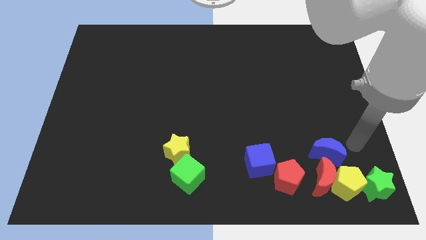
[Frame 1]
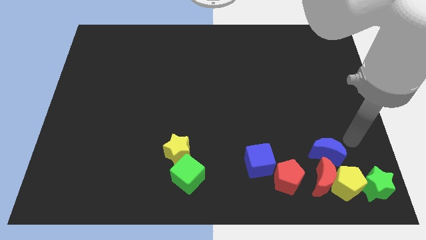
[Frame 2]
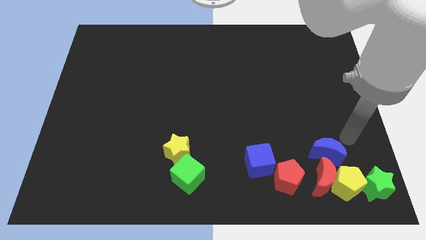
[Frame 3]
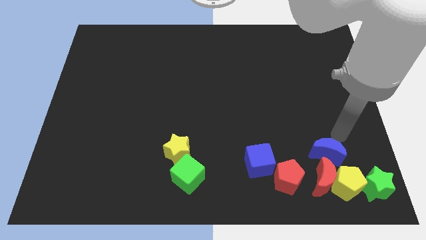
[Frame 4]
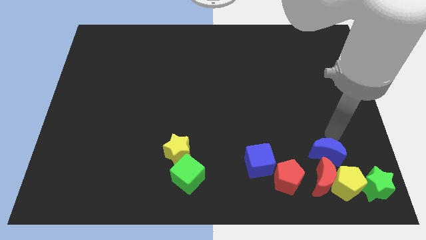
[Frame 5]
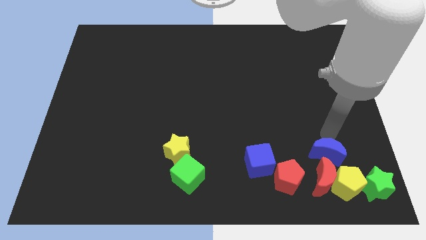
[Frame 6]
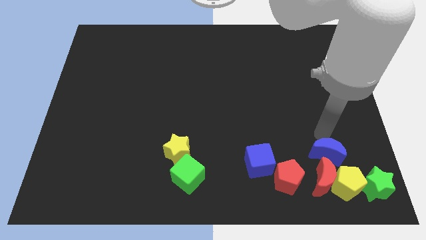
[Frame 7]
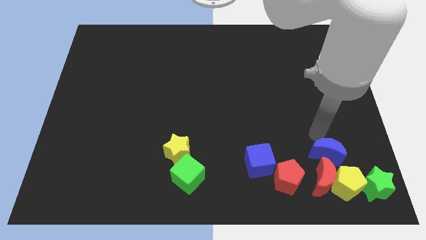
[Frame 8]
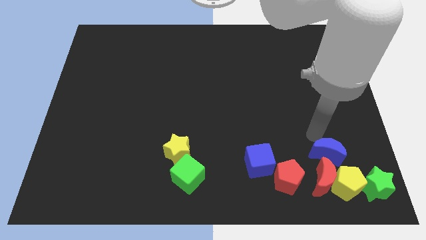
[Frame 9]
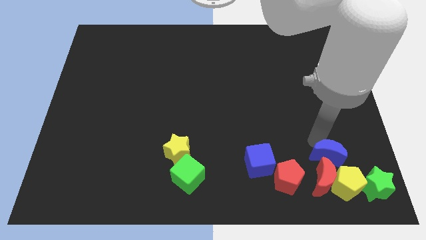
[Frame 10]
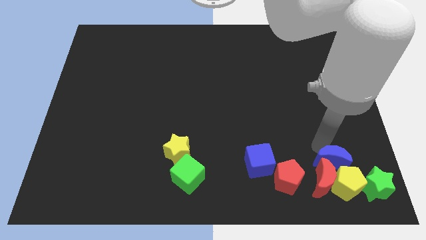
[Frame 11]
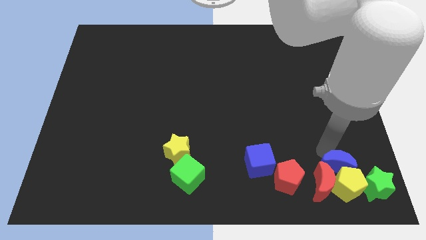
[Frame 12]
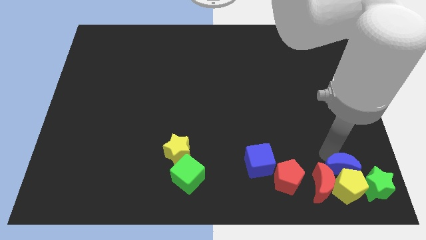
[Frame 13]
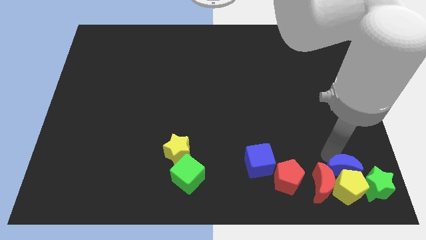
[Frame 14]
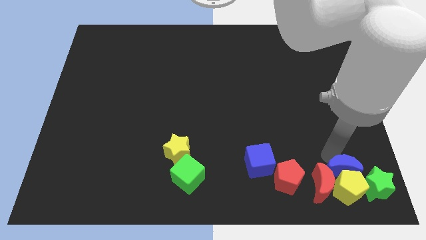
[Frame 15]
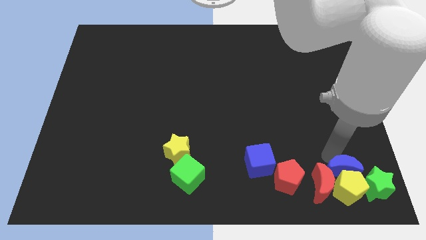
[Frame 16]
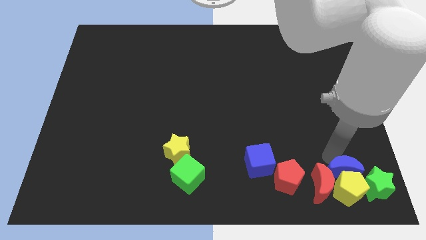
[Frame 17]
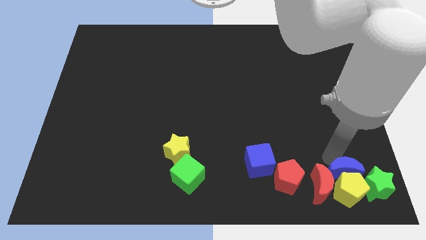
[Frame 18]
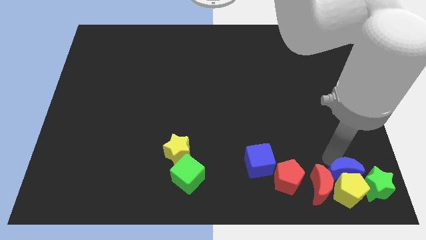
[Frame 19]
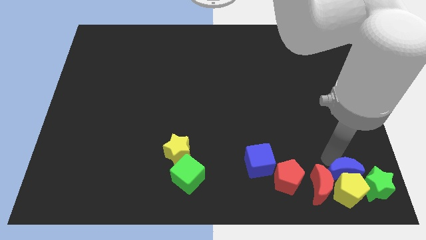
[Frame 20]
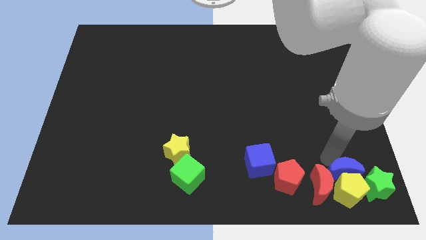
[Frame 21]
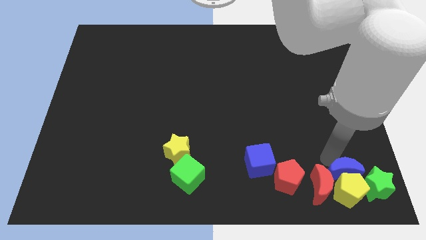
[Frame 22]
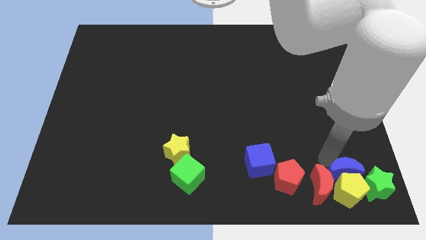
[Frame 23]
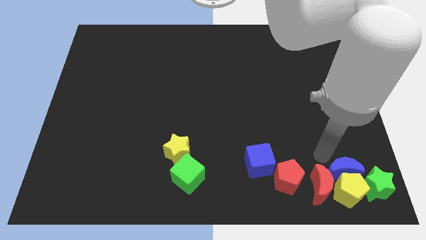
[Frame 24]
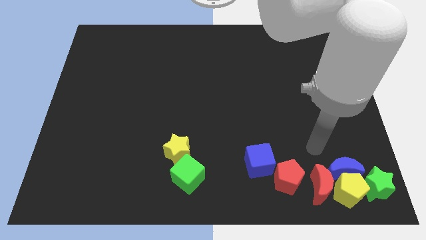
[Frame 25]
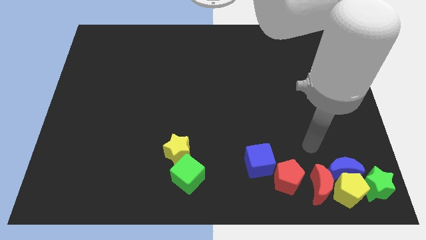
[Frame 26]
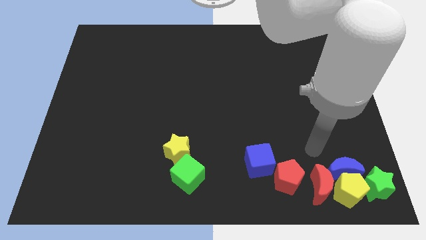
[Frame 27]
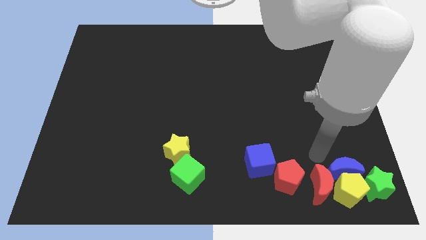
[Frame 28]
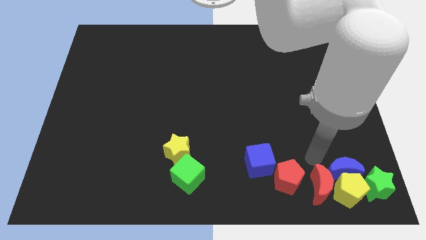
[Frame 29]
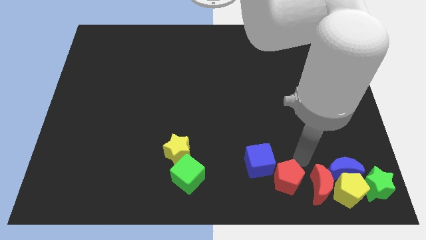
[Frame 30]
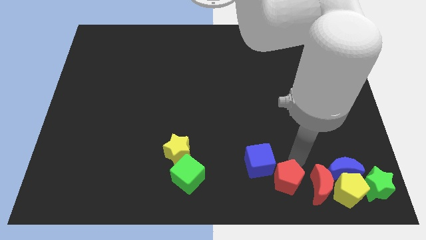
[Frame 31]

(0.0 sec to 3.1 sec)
push blue crescent into the yellow pentagon

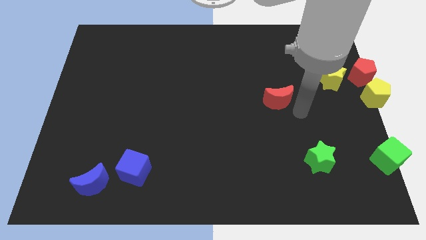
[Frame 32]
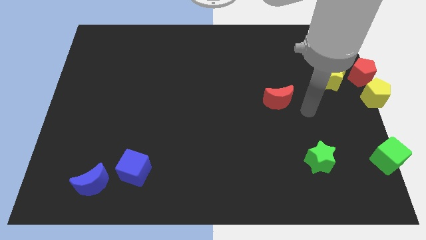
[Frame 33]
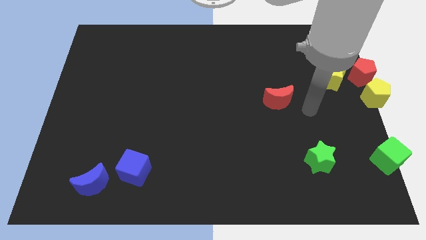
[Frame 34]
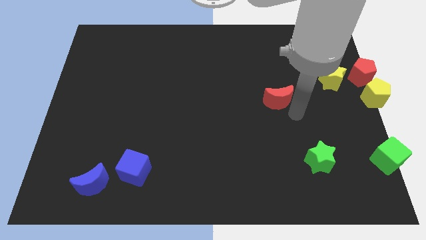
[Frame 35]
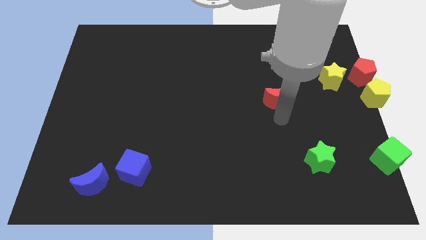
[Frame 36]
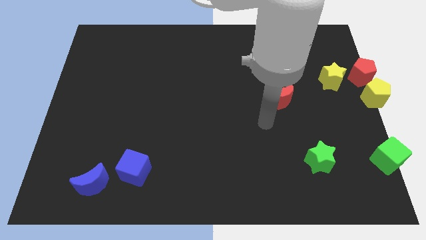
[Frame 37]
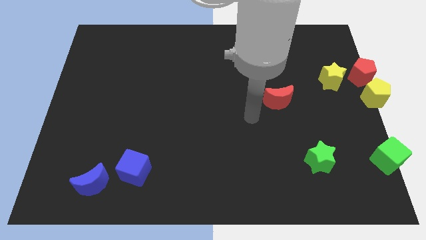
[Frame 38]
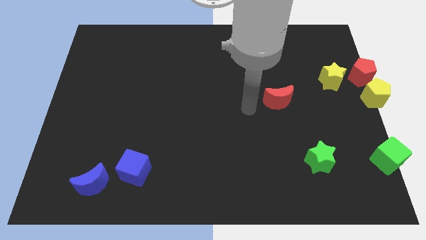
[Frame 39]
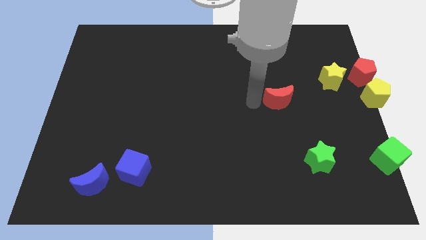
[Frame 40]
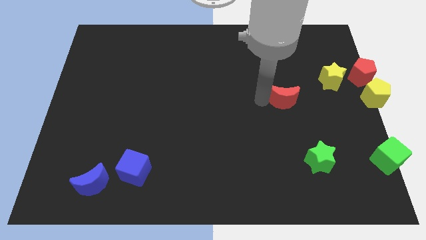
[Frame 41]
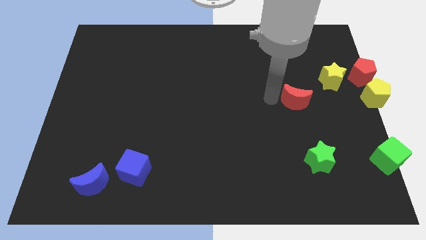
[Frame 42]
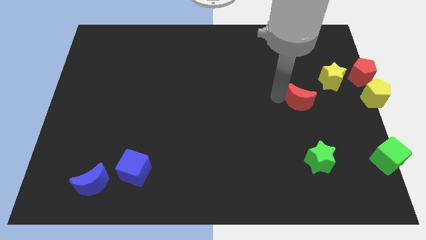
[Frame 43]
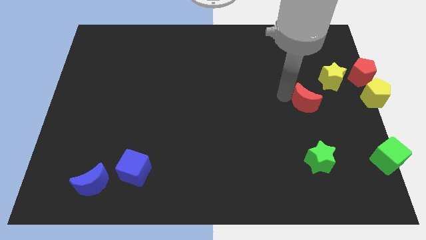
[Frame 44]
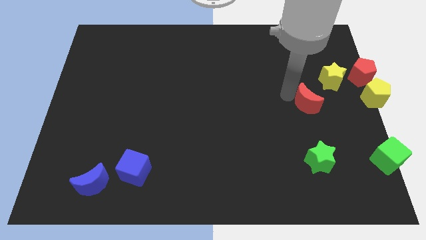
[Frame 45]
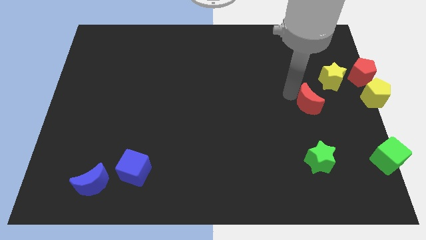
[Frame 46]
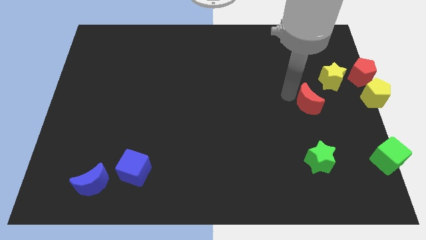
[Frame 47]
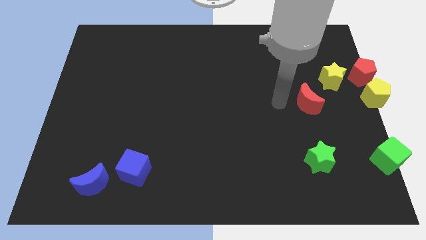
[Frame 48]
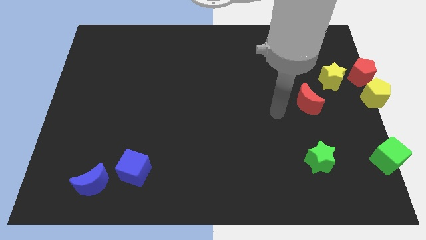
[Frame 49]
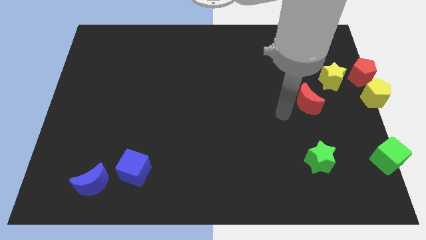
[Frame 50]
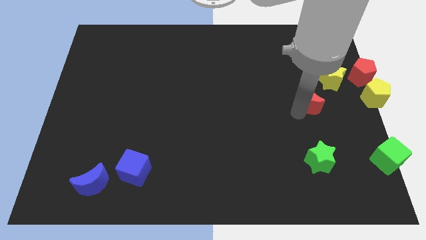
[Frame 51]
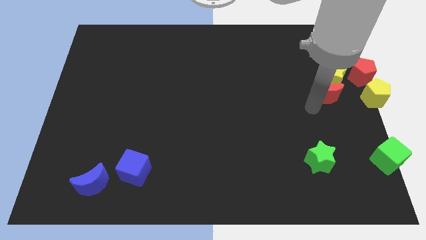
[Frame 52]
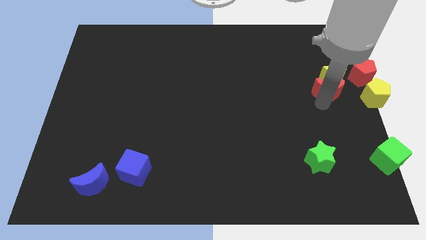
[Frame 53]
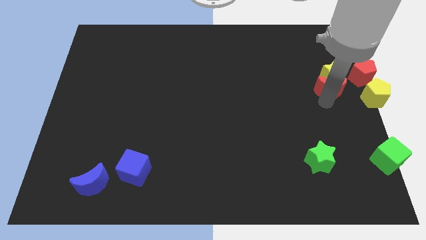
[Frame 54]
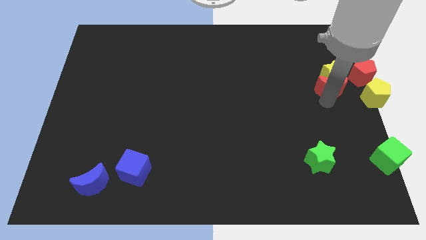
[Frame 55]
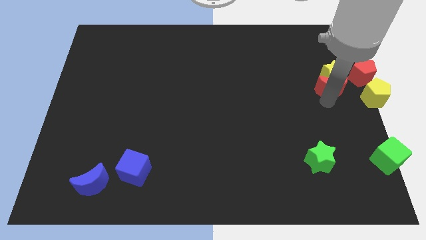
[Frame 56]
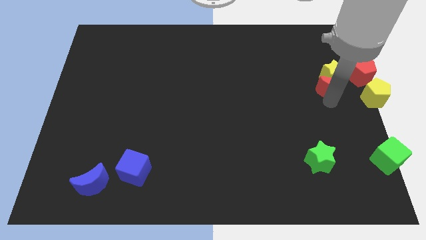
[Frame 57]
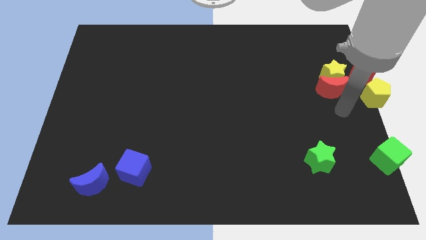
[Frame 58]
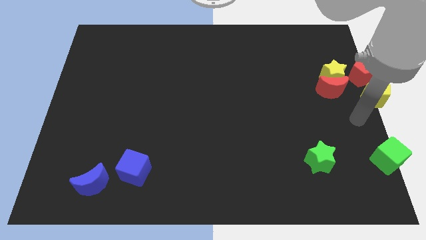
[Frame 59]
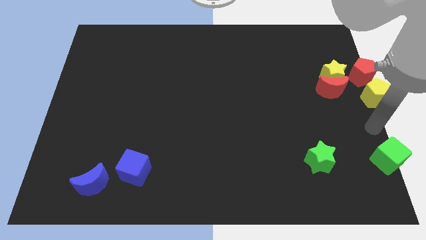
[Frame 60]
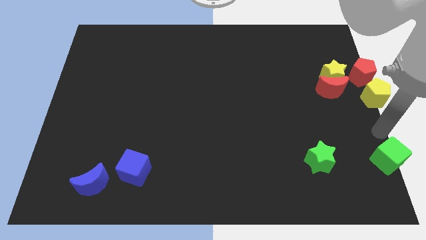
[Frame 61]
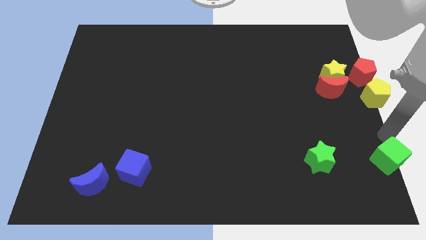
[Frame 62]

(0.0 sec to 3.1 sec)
move red crescent into the yellow star

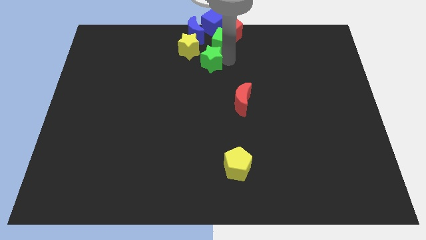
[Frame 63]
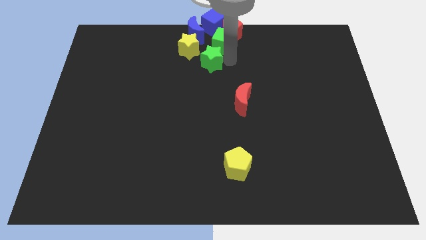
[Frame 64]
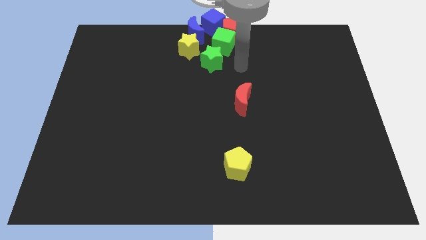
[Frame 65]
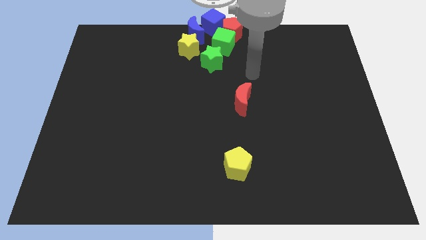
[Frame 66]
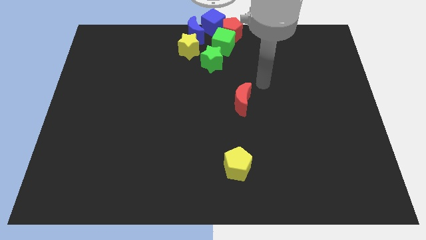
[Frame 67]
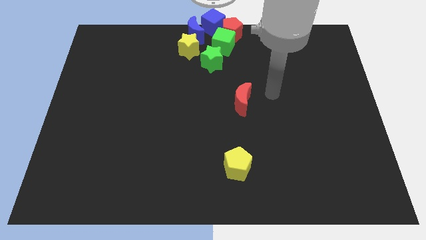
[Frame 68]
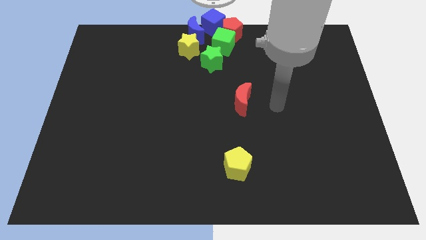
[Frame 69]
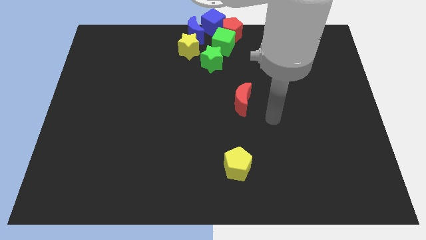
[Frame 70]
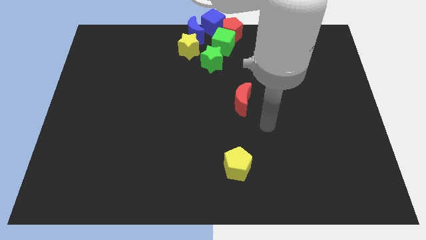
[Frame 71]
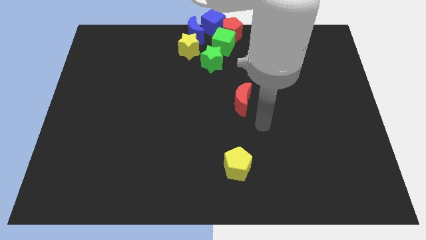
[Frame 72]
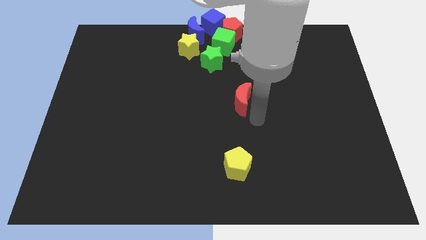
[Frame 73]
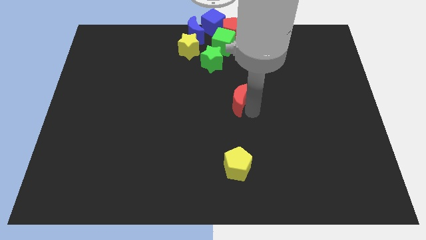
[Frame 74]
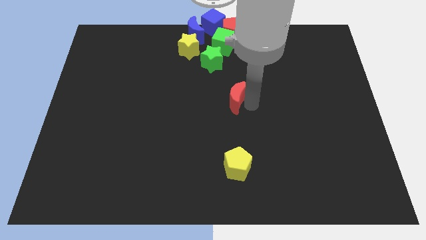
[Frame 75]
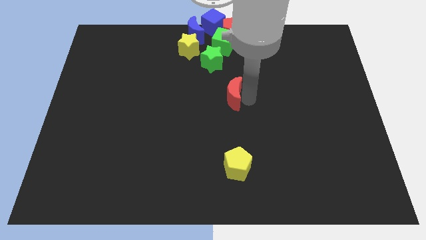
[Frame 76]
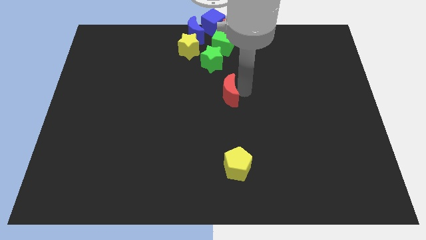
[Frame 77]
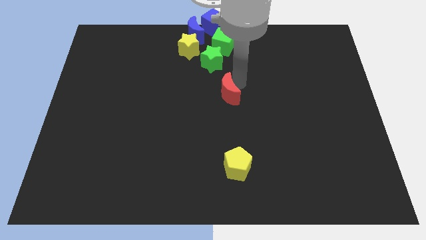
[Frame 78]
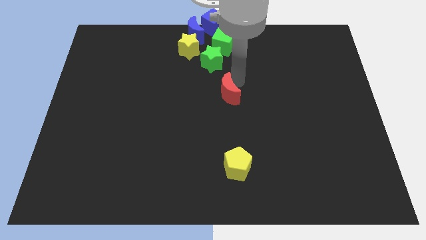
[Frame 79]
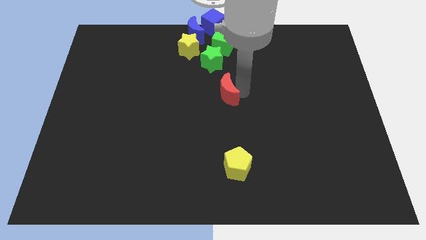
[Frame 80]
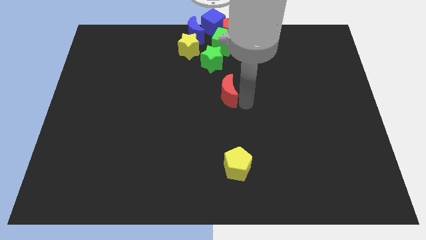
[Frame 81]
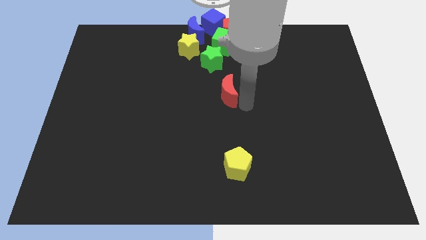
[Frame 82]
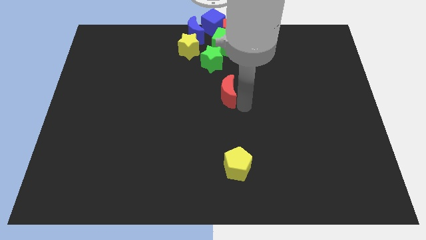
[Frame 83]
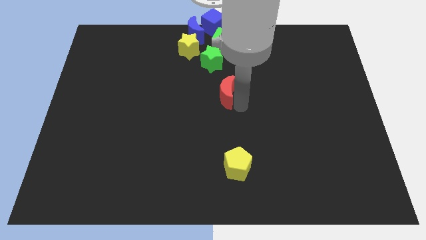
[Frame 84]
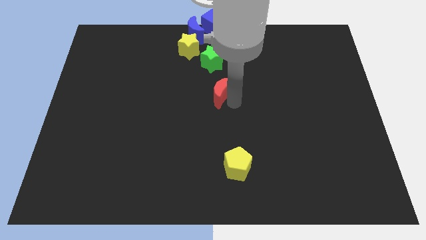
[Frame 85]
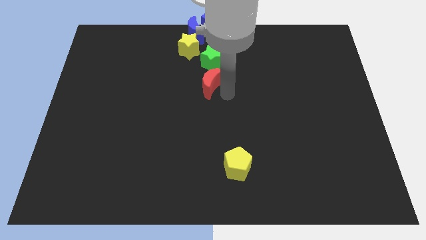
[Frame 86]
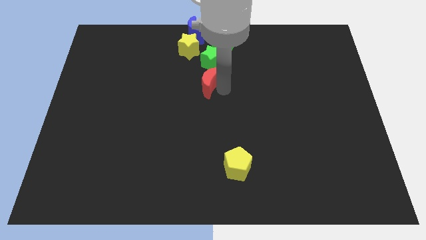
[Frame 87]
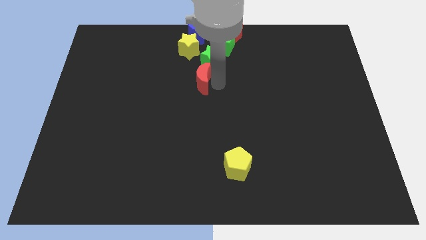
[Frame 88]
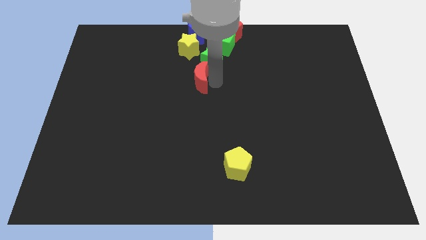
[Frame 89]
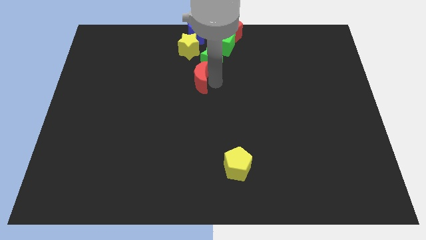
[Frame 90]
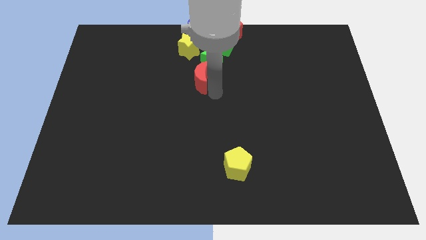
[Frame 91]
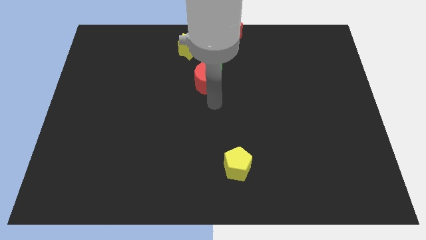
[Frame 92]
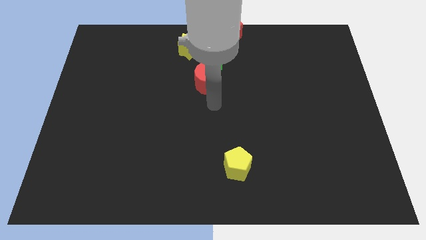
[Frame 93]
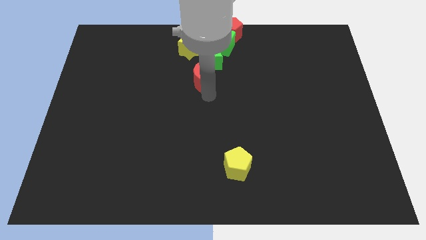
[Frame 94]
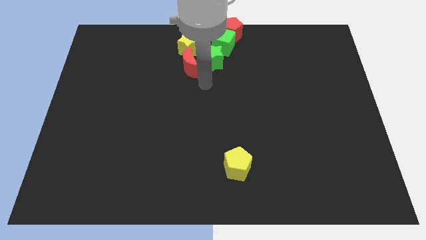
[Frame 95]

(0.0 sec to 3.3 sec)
push the red moon into the group of blocks
